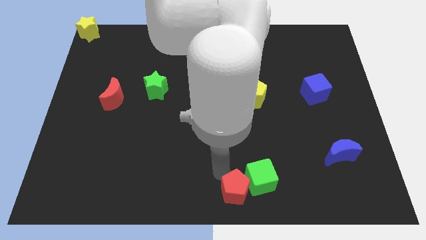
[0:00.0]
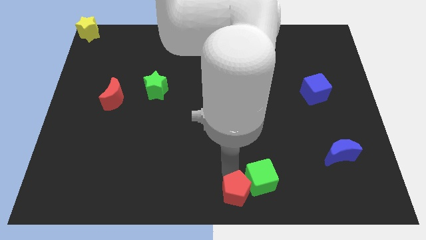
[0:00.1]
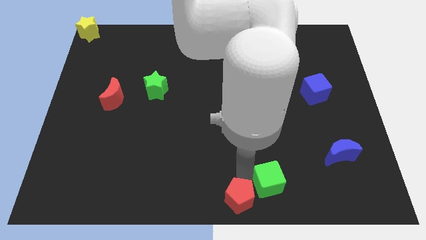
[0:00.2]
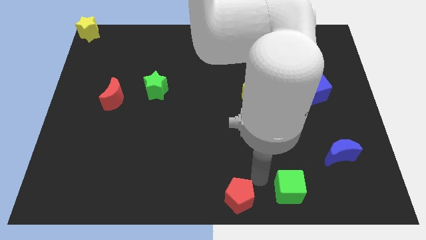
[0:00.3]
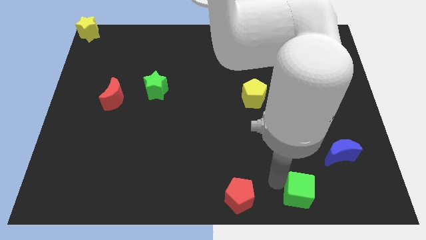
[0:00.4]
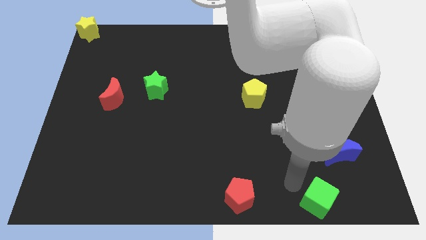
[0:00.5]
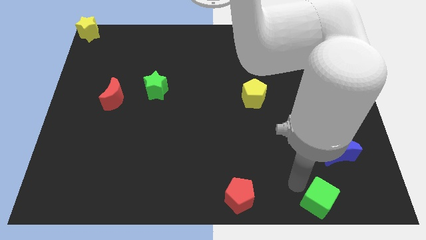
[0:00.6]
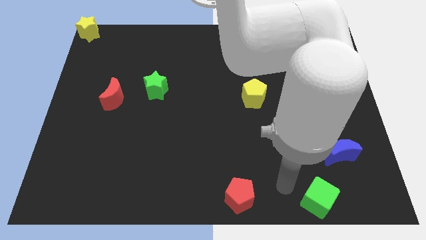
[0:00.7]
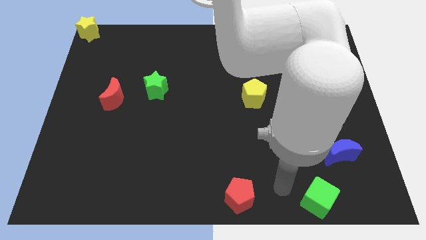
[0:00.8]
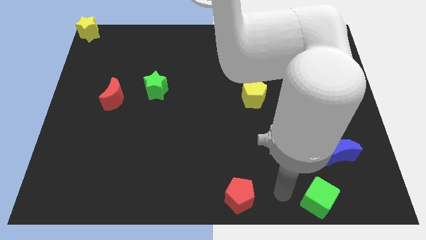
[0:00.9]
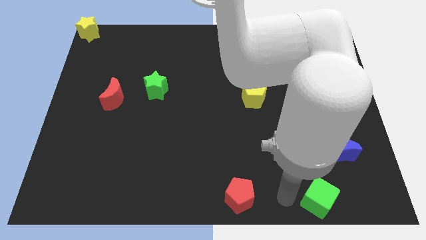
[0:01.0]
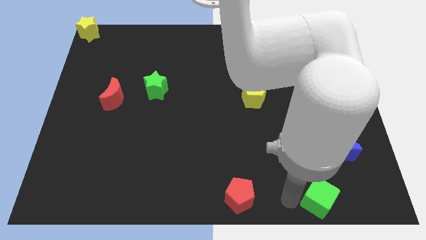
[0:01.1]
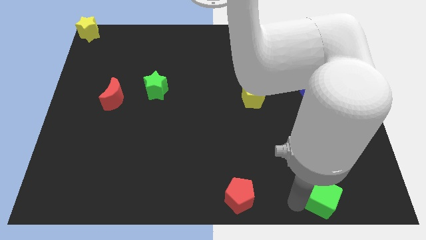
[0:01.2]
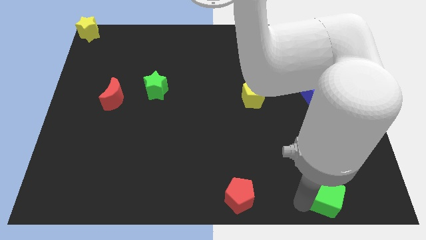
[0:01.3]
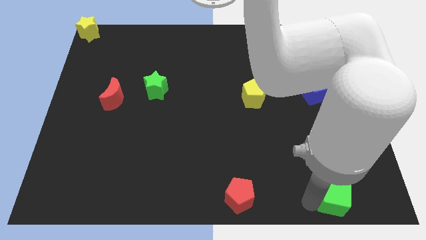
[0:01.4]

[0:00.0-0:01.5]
place the green cube right to the red pentagon

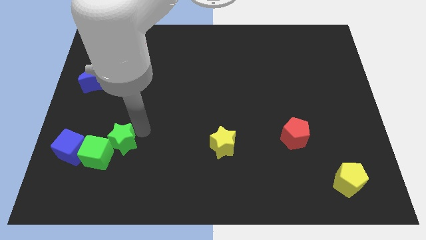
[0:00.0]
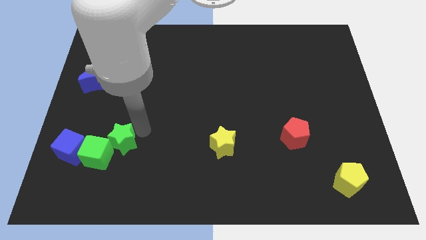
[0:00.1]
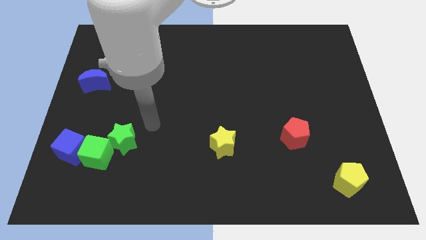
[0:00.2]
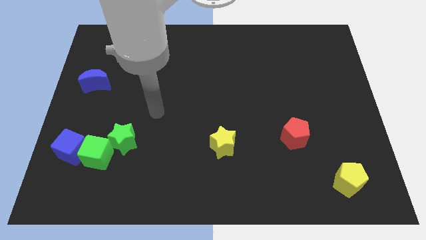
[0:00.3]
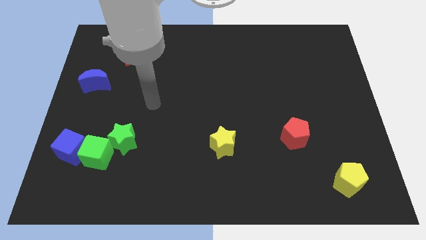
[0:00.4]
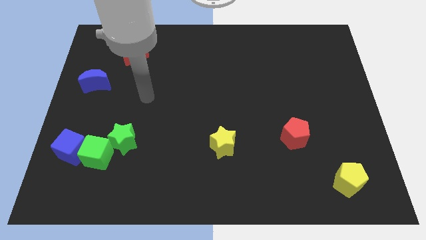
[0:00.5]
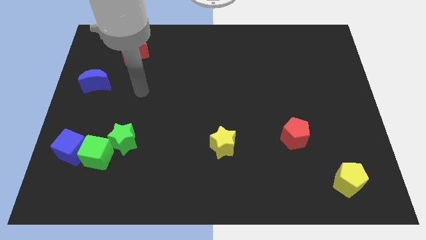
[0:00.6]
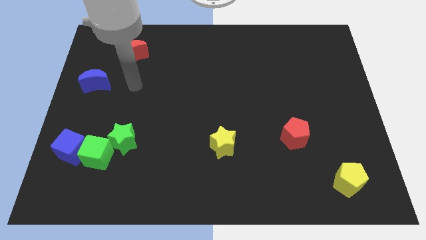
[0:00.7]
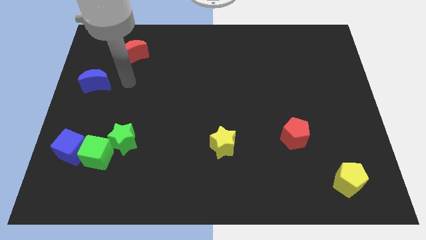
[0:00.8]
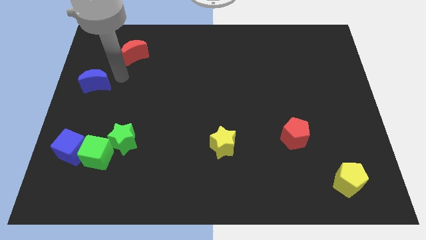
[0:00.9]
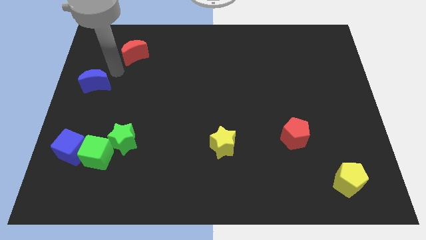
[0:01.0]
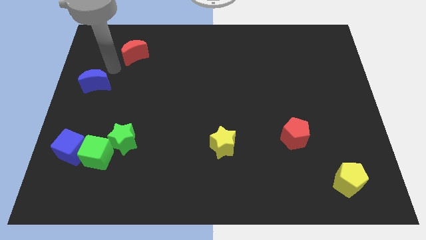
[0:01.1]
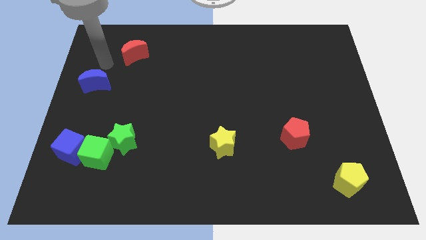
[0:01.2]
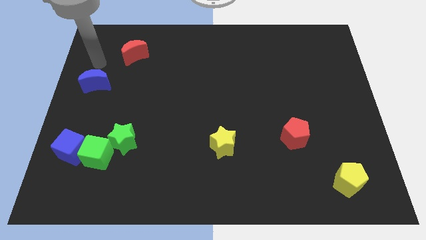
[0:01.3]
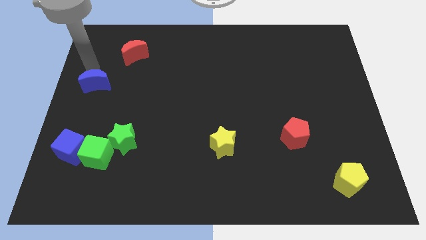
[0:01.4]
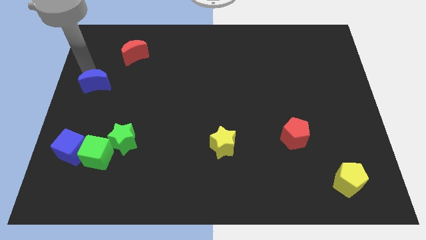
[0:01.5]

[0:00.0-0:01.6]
point your arm above blue moon

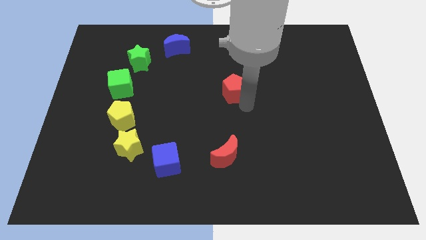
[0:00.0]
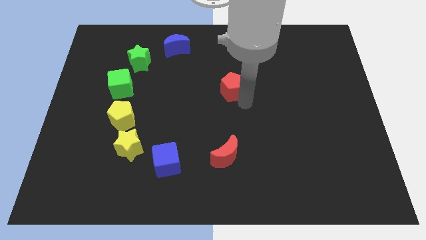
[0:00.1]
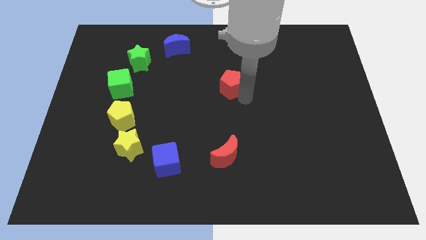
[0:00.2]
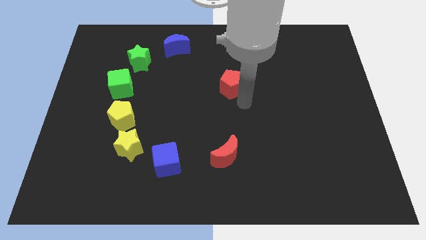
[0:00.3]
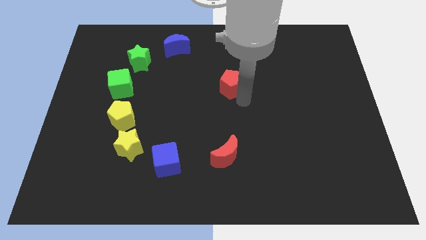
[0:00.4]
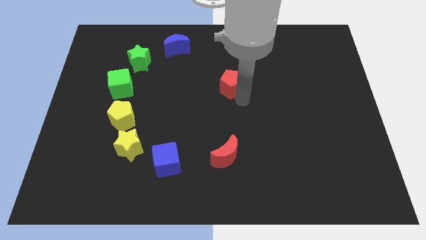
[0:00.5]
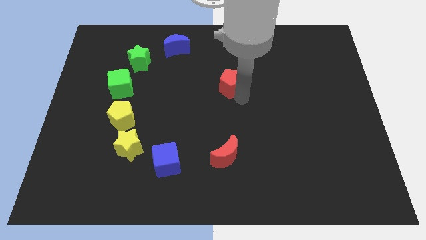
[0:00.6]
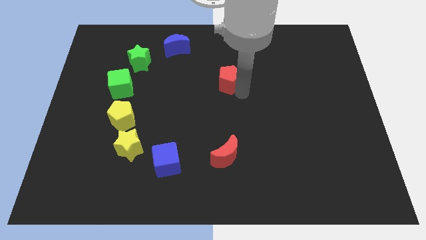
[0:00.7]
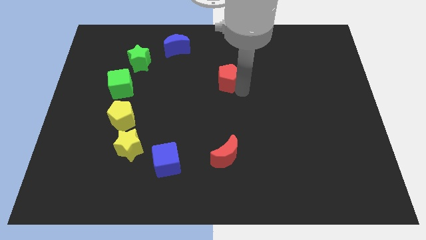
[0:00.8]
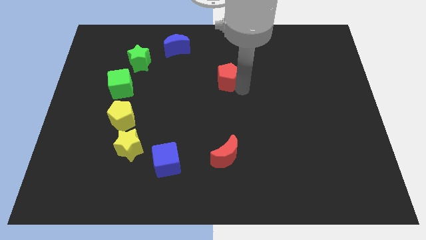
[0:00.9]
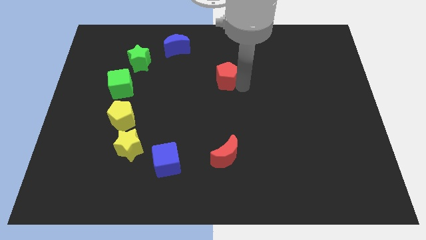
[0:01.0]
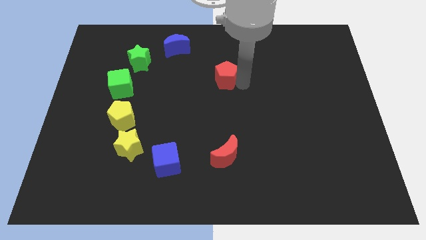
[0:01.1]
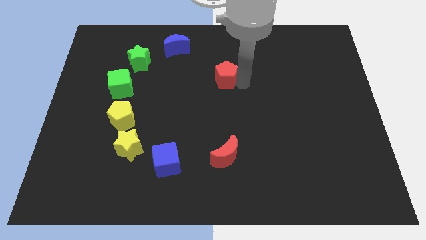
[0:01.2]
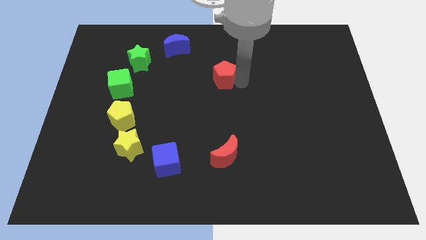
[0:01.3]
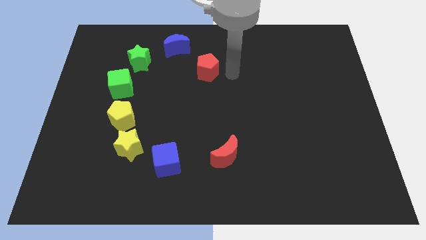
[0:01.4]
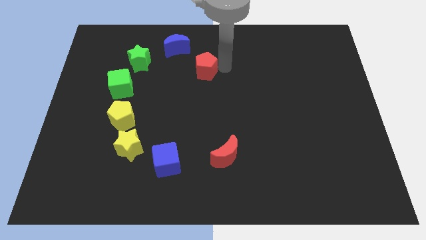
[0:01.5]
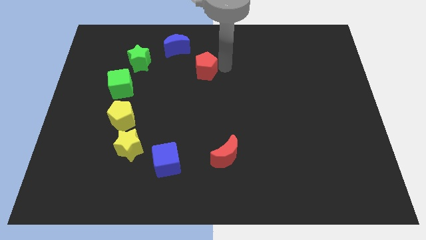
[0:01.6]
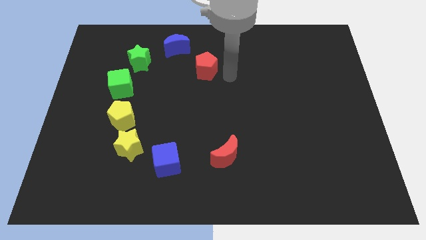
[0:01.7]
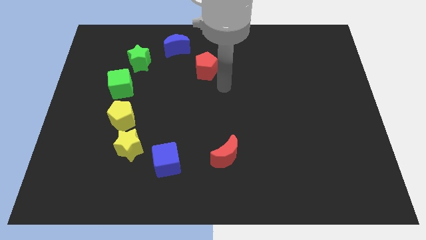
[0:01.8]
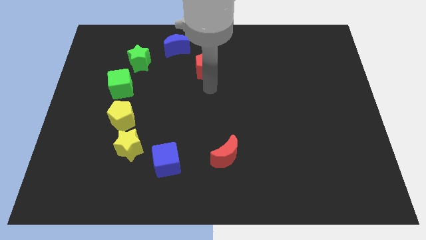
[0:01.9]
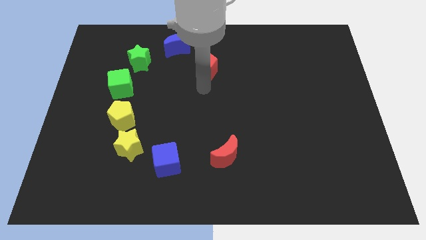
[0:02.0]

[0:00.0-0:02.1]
move the red pentagon to the top of the board

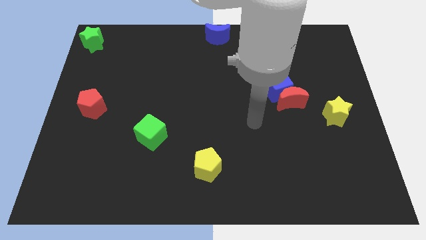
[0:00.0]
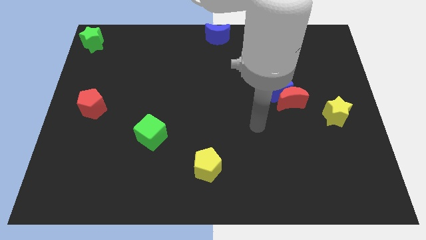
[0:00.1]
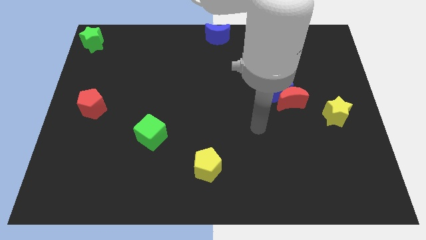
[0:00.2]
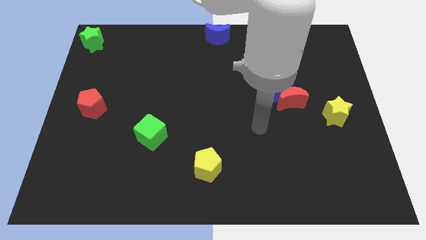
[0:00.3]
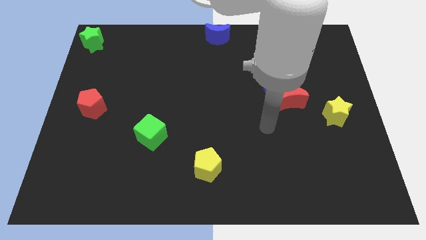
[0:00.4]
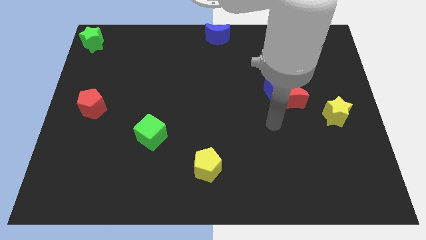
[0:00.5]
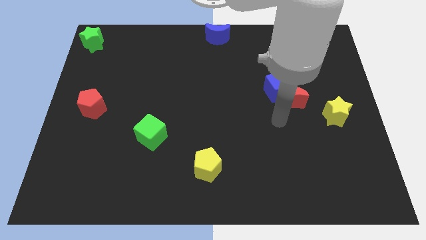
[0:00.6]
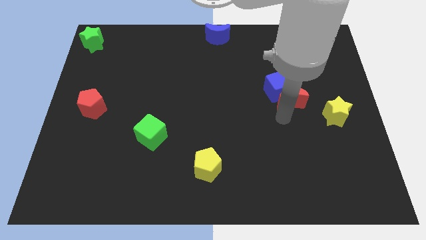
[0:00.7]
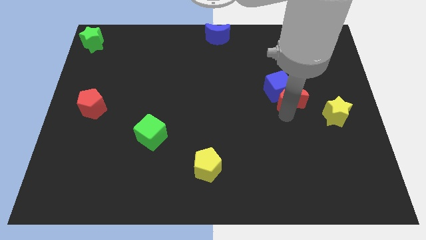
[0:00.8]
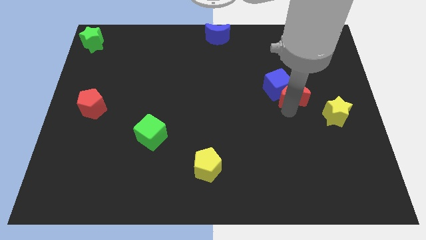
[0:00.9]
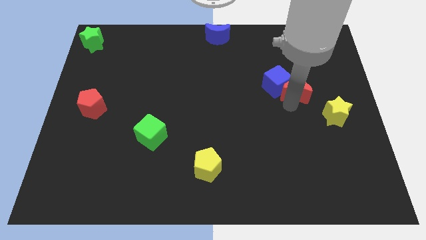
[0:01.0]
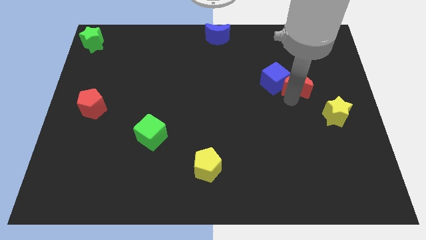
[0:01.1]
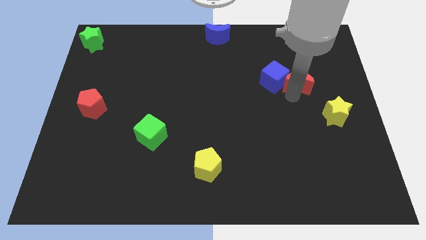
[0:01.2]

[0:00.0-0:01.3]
place the arm below the red crescent

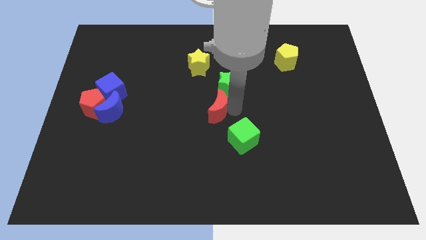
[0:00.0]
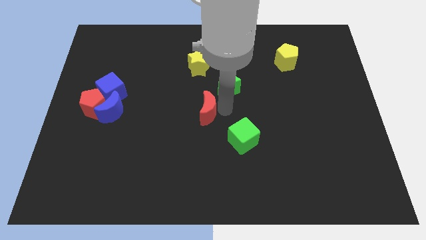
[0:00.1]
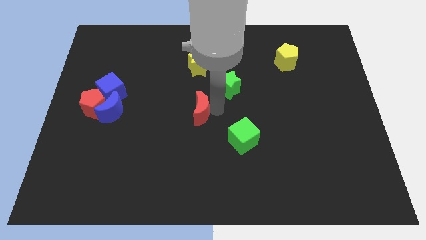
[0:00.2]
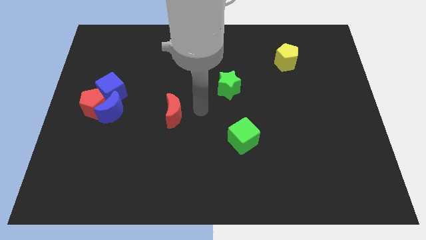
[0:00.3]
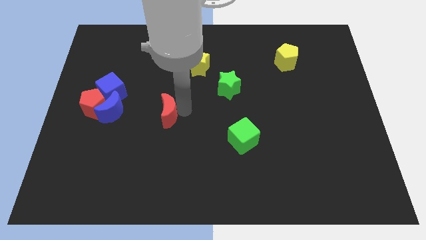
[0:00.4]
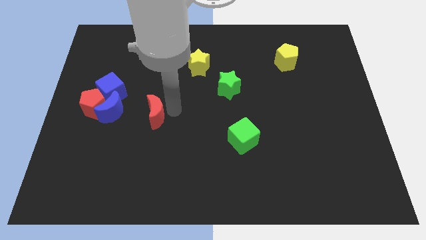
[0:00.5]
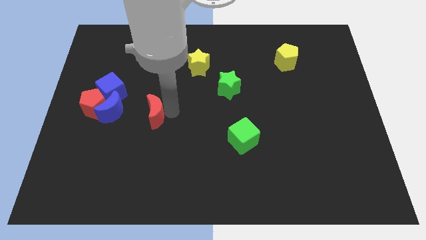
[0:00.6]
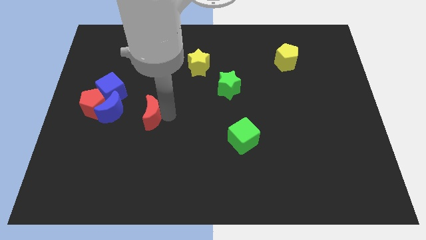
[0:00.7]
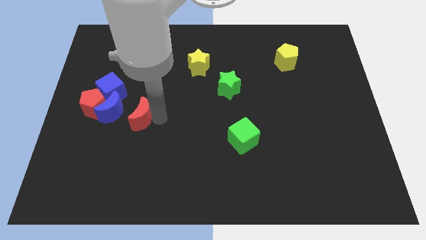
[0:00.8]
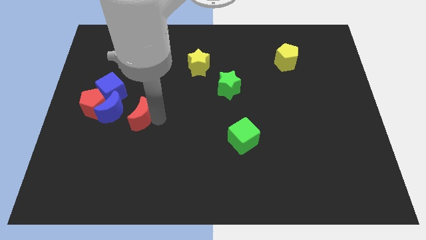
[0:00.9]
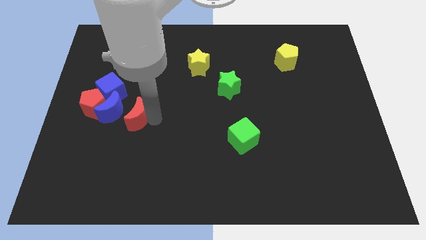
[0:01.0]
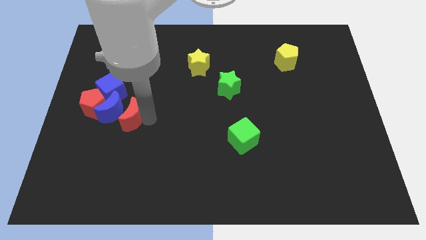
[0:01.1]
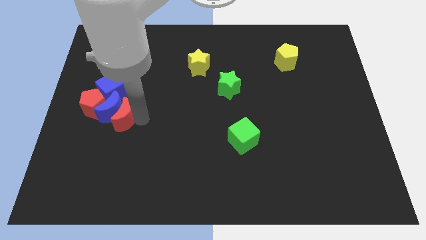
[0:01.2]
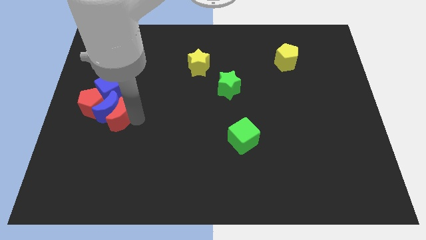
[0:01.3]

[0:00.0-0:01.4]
move the red crescent into the right of the blue crescent

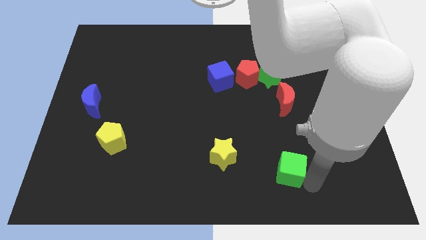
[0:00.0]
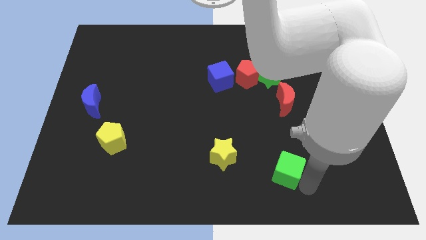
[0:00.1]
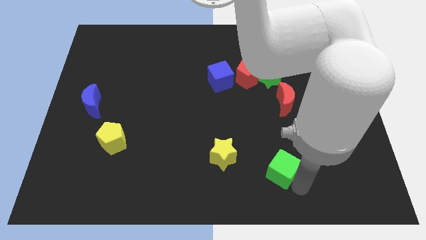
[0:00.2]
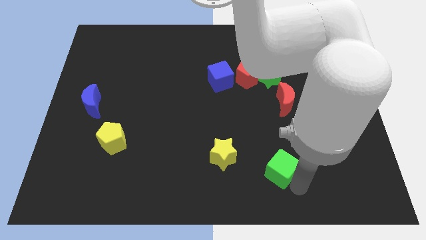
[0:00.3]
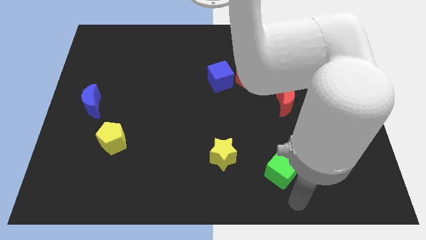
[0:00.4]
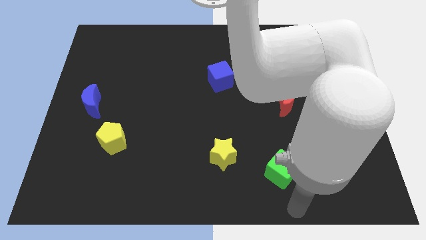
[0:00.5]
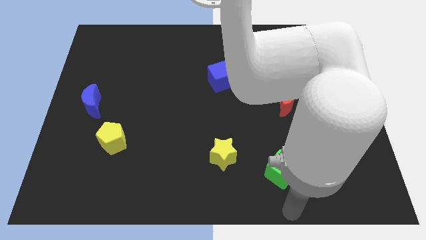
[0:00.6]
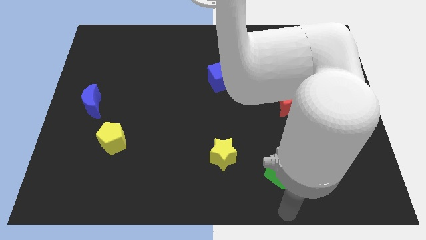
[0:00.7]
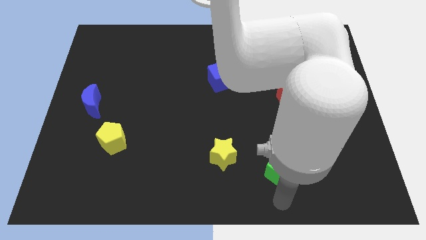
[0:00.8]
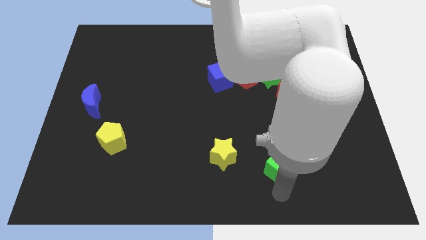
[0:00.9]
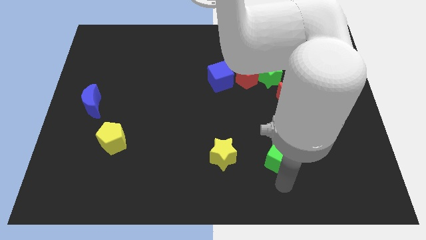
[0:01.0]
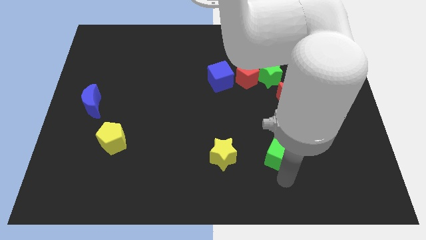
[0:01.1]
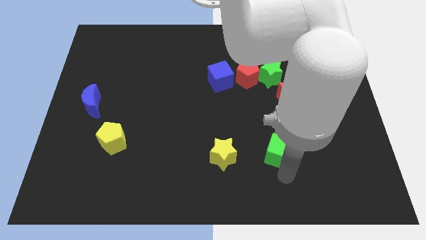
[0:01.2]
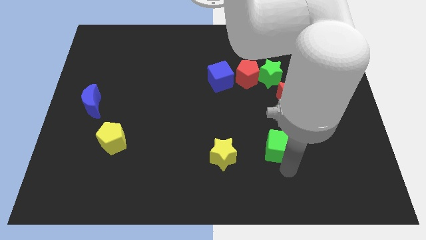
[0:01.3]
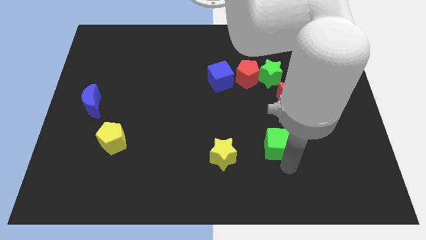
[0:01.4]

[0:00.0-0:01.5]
move the green cube parallel to the yellow star
